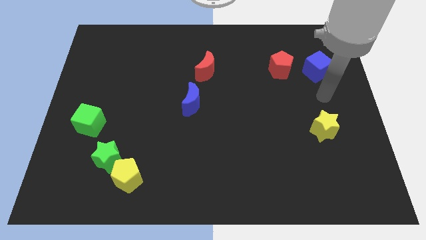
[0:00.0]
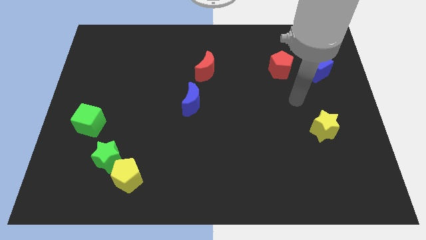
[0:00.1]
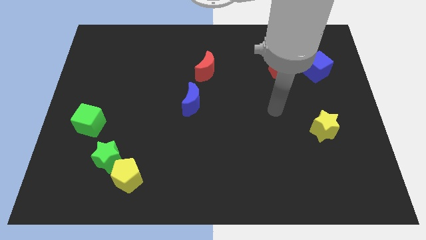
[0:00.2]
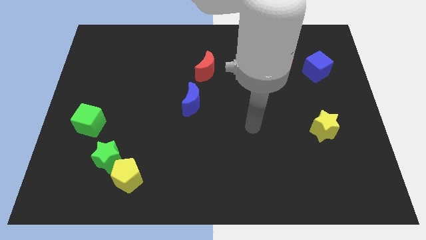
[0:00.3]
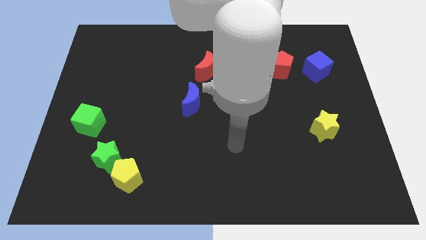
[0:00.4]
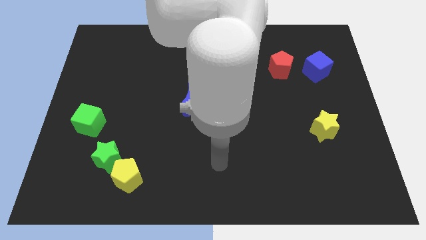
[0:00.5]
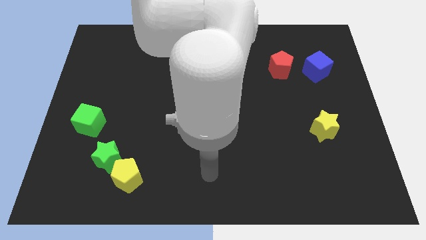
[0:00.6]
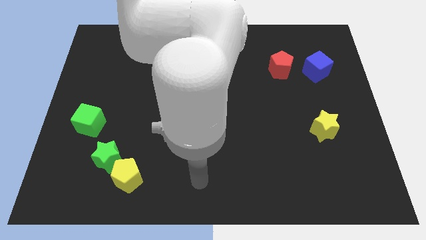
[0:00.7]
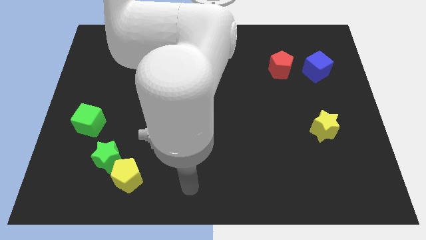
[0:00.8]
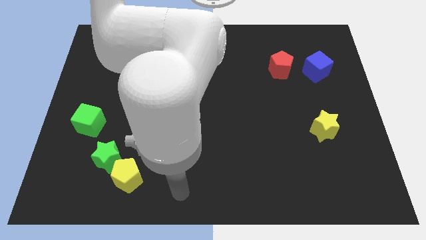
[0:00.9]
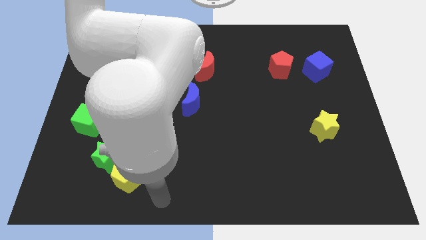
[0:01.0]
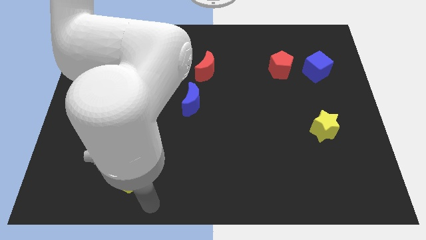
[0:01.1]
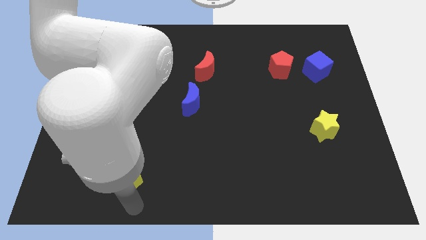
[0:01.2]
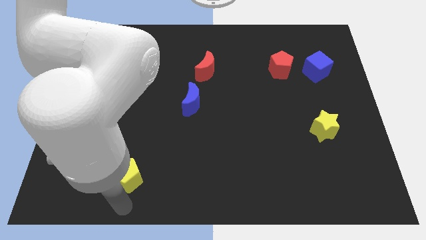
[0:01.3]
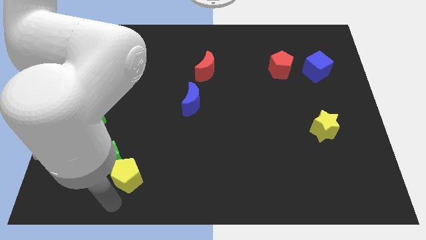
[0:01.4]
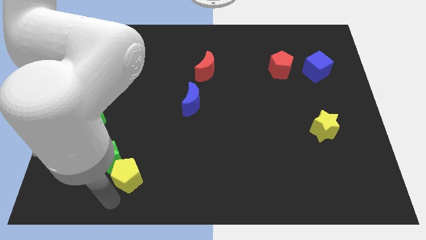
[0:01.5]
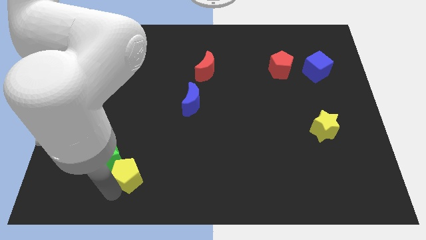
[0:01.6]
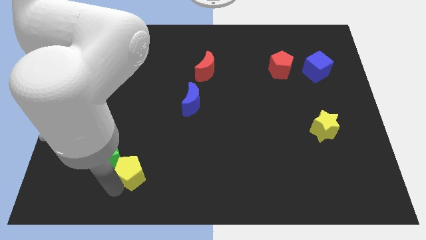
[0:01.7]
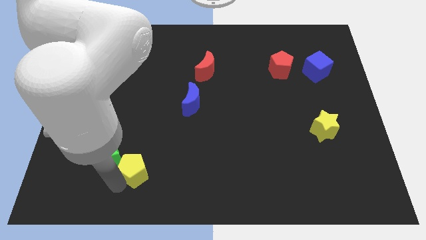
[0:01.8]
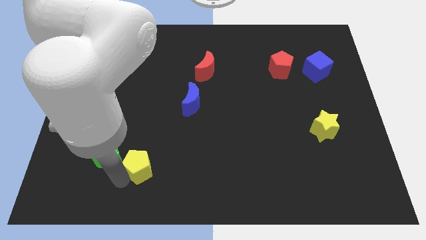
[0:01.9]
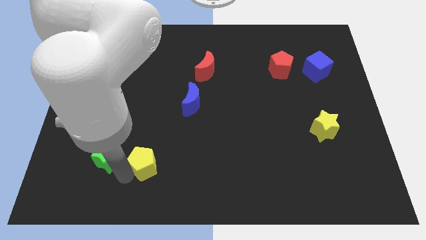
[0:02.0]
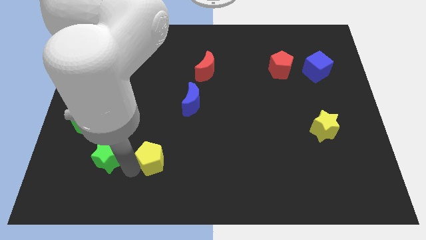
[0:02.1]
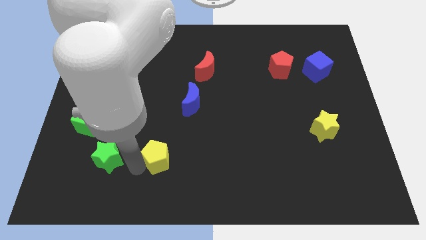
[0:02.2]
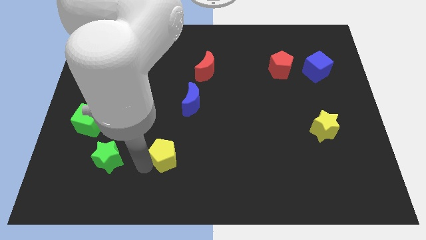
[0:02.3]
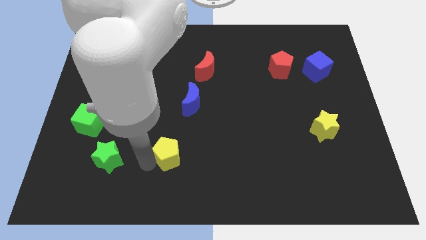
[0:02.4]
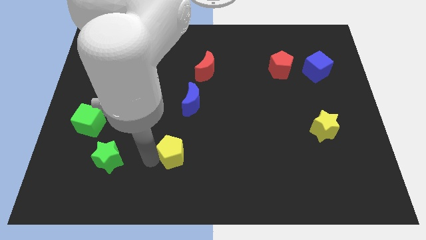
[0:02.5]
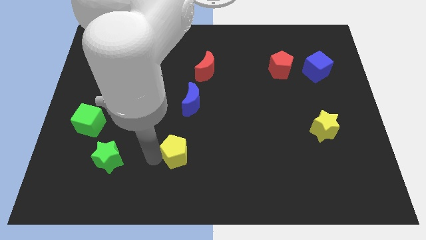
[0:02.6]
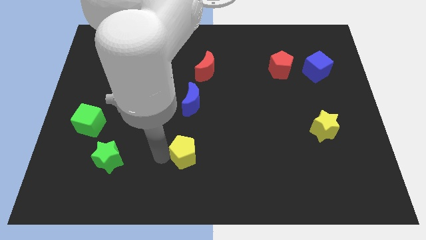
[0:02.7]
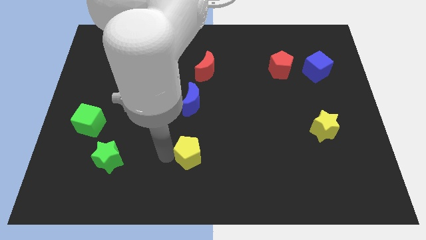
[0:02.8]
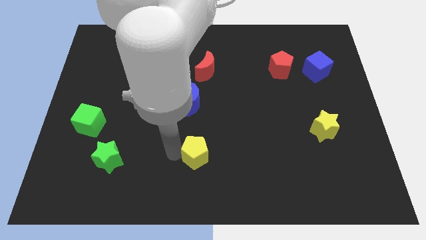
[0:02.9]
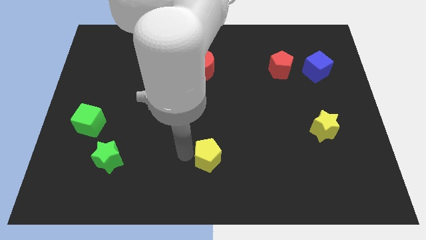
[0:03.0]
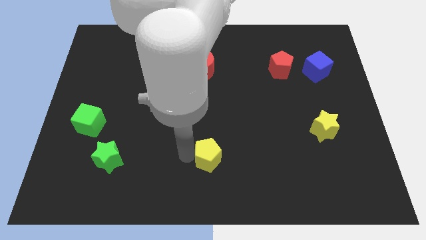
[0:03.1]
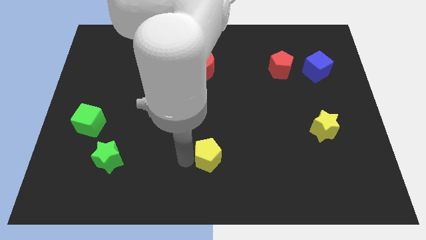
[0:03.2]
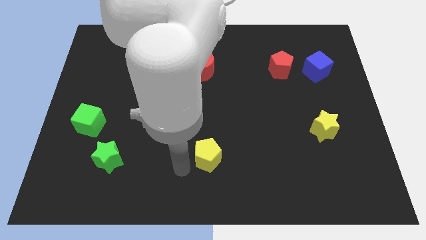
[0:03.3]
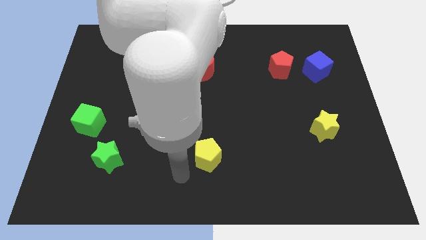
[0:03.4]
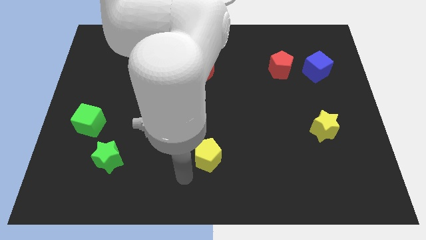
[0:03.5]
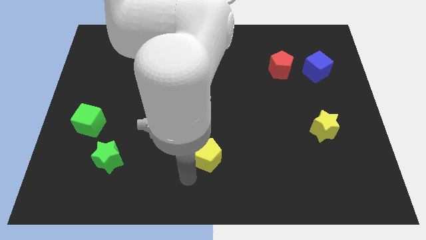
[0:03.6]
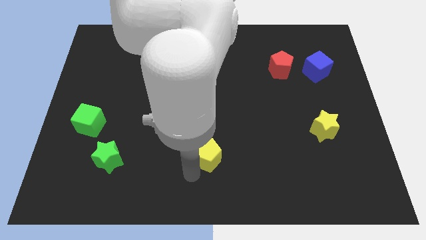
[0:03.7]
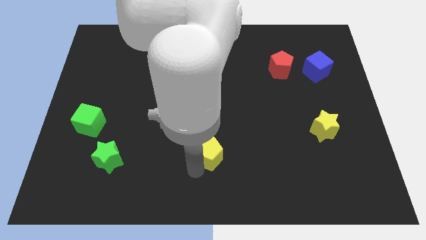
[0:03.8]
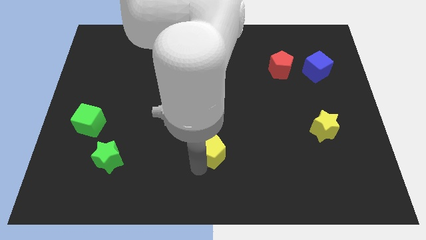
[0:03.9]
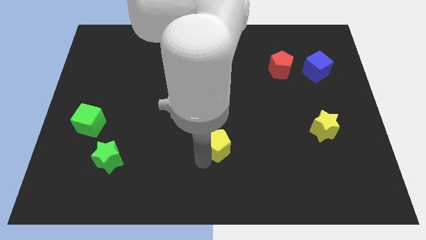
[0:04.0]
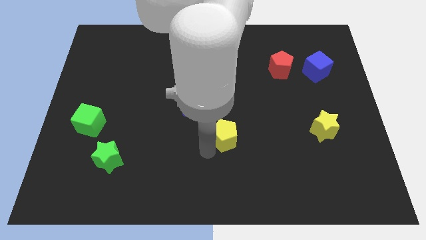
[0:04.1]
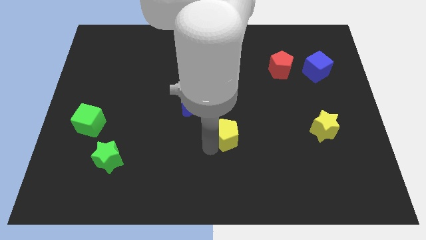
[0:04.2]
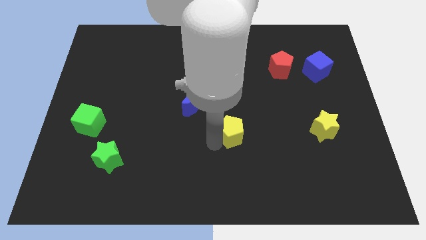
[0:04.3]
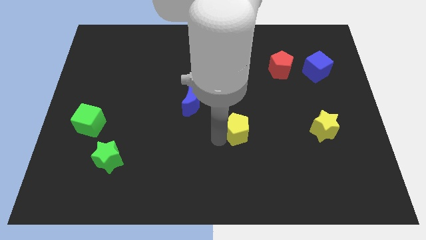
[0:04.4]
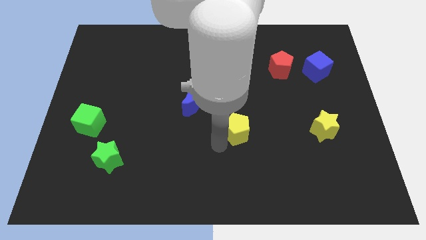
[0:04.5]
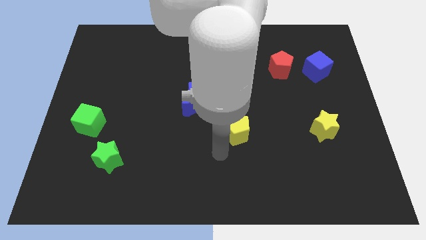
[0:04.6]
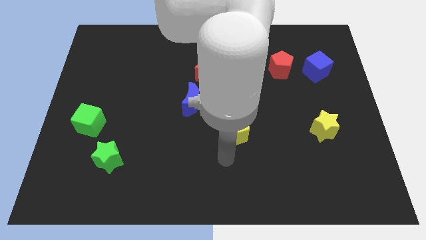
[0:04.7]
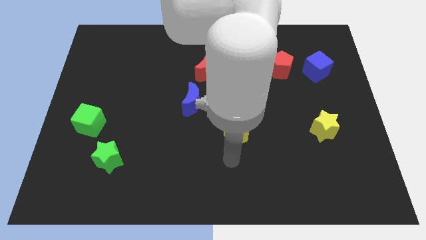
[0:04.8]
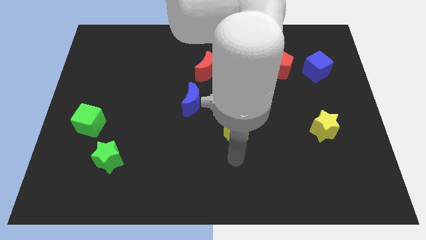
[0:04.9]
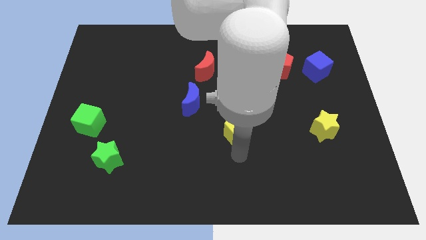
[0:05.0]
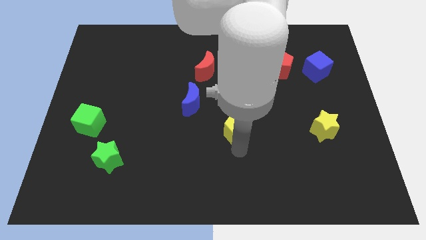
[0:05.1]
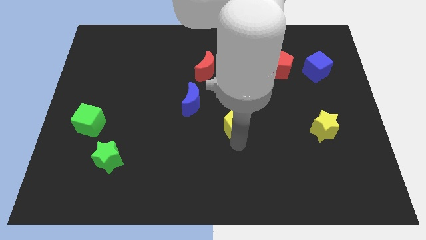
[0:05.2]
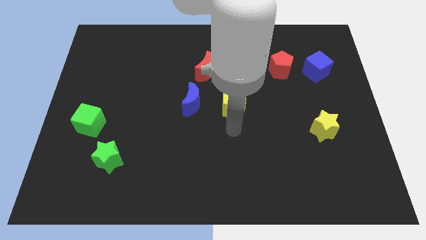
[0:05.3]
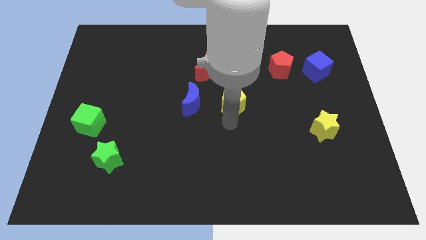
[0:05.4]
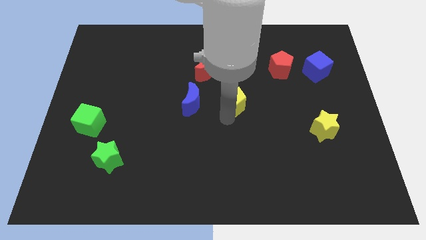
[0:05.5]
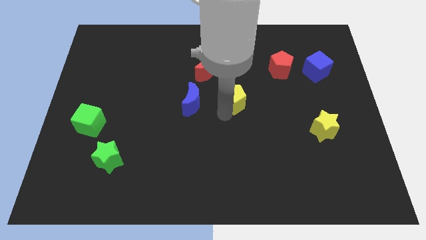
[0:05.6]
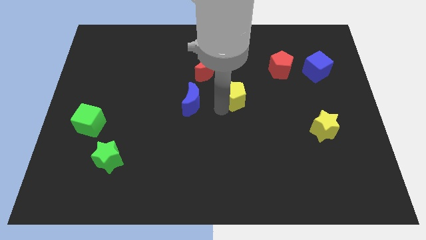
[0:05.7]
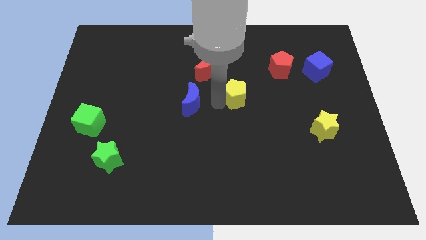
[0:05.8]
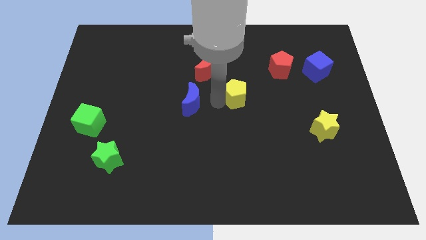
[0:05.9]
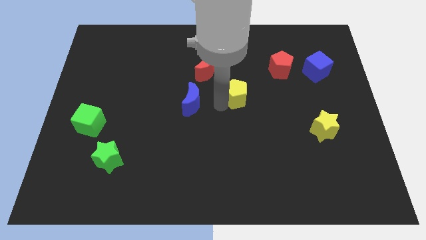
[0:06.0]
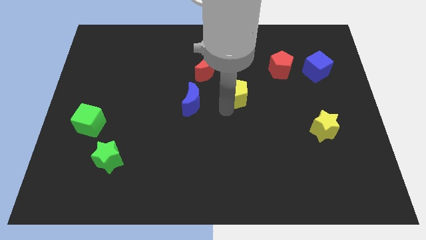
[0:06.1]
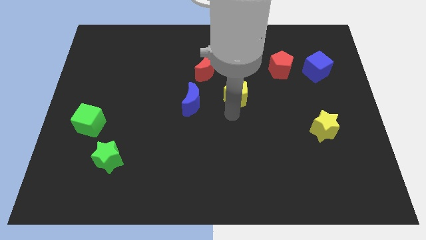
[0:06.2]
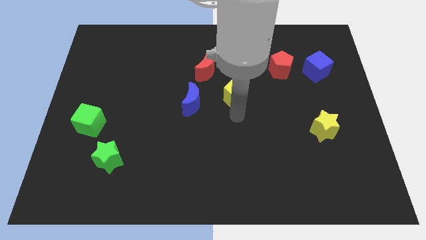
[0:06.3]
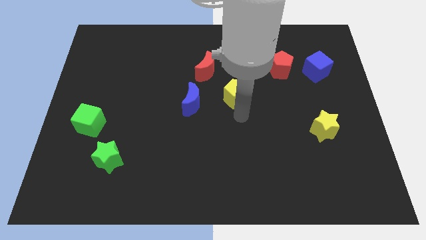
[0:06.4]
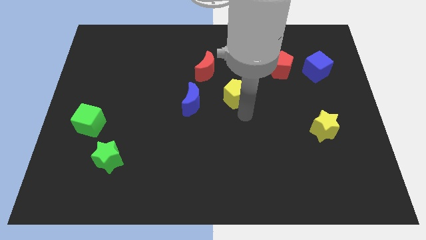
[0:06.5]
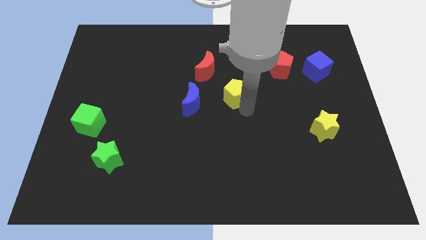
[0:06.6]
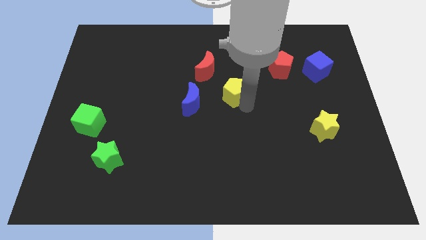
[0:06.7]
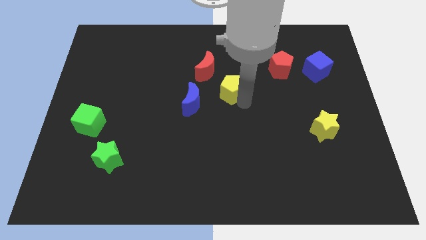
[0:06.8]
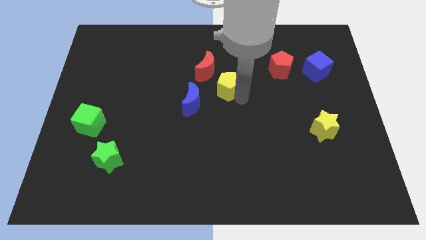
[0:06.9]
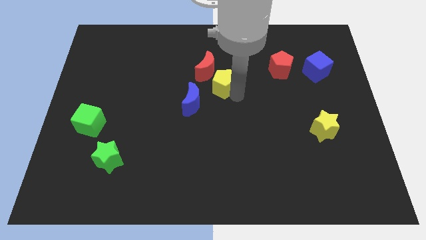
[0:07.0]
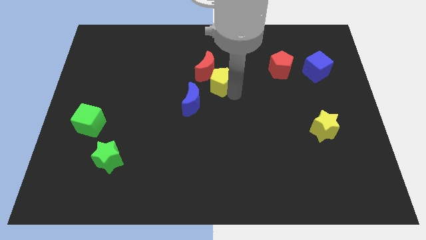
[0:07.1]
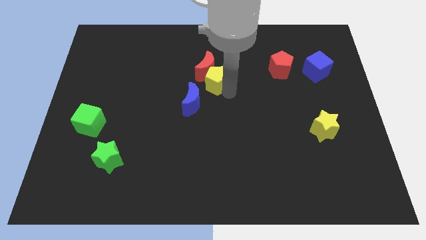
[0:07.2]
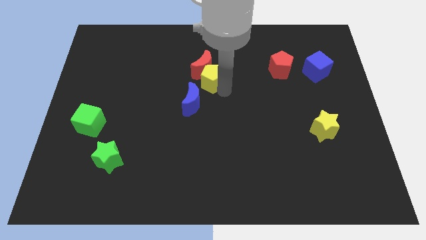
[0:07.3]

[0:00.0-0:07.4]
put the yellow pentagon to the red moon

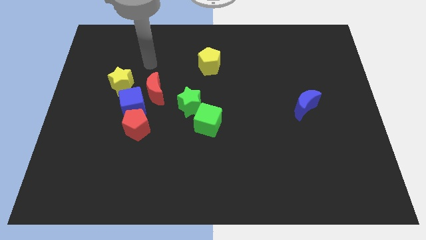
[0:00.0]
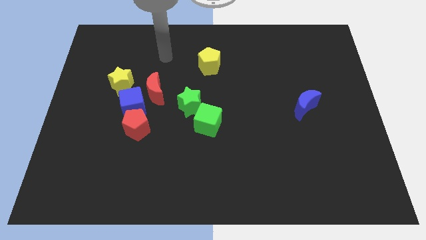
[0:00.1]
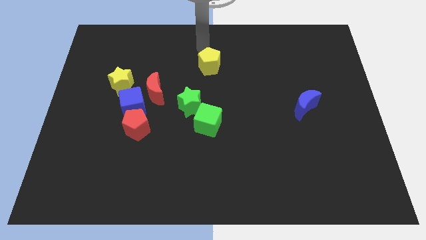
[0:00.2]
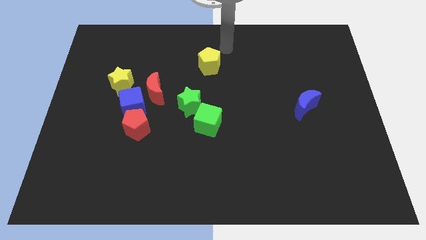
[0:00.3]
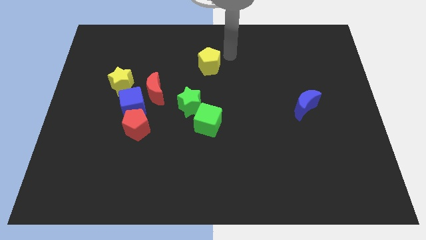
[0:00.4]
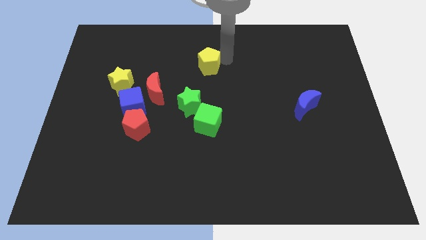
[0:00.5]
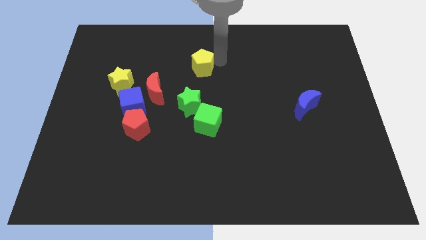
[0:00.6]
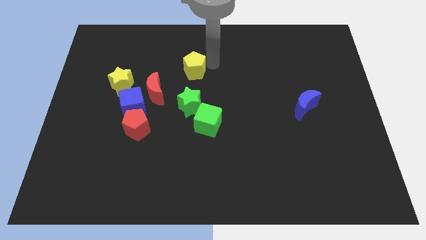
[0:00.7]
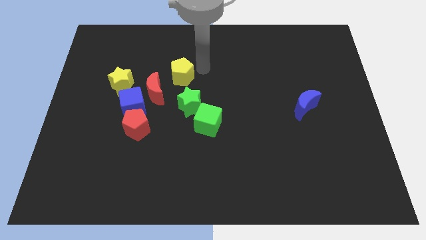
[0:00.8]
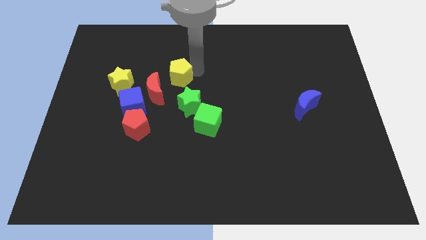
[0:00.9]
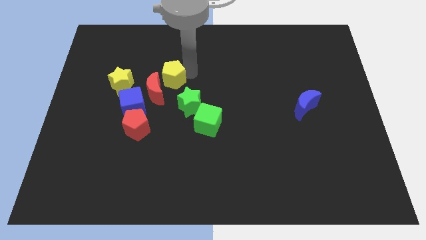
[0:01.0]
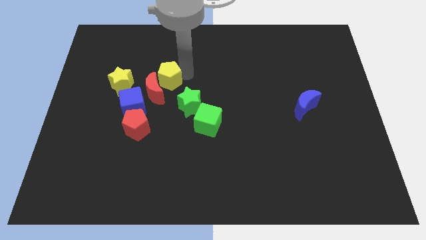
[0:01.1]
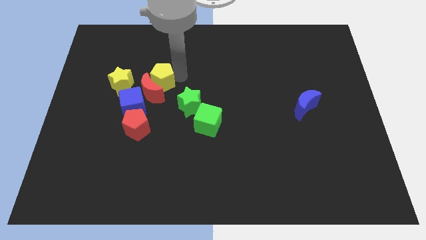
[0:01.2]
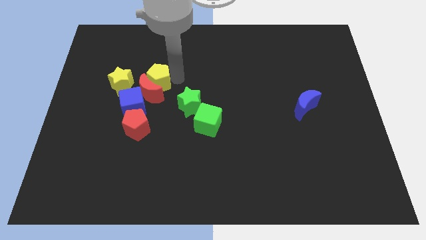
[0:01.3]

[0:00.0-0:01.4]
slide the yellow pentagon close to the red moon
